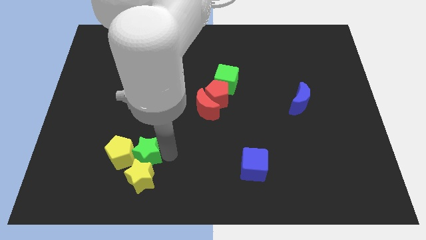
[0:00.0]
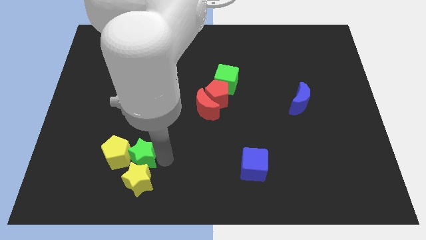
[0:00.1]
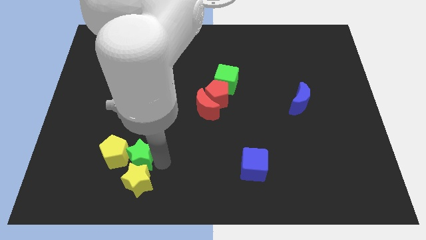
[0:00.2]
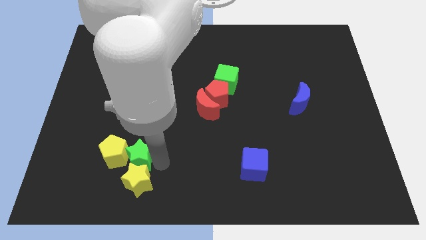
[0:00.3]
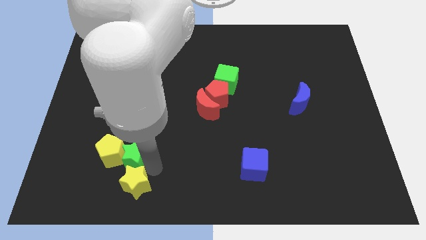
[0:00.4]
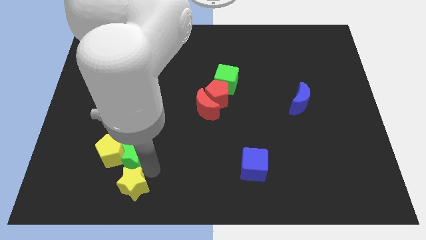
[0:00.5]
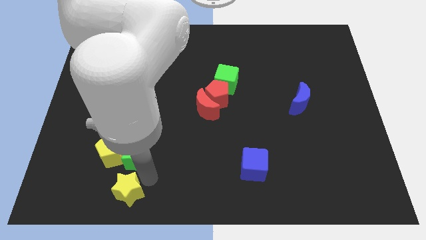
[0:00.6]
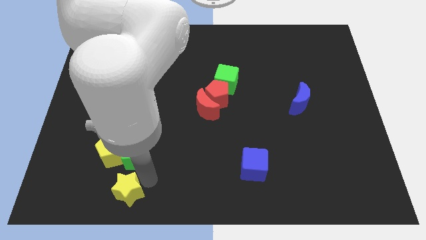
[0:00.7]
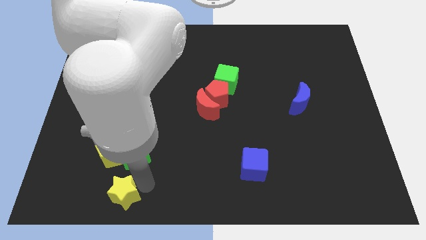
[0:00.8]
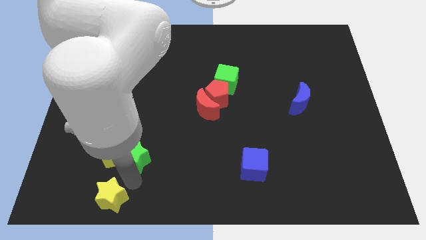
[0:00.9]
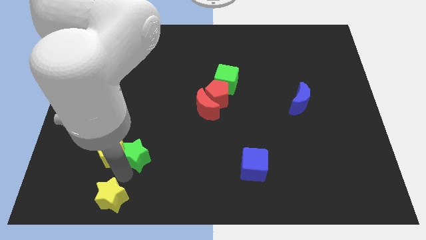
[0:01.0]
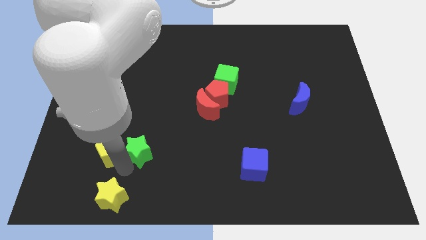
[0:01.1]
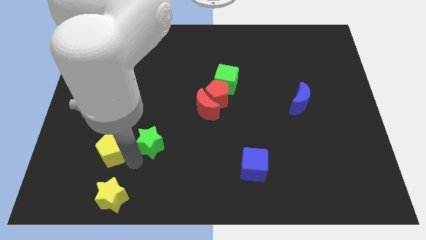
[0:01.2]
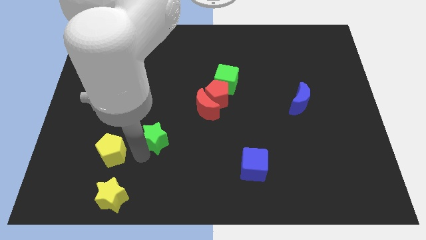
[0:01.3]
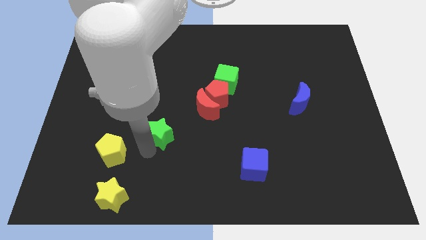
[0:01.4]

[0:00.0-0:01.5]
place yellow star below yellow pentagon

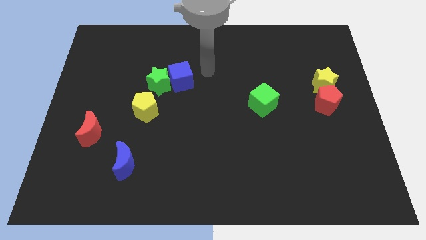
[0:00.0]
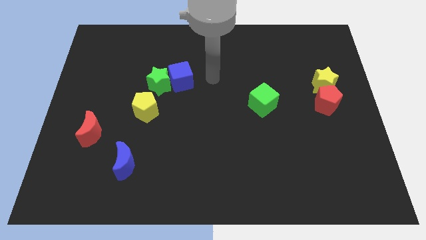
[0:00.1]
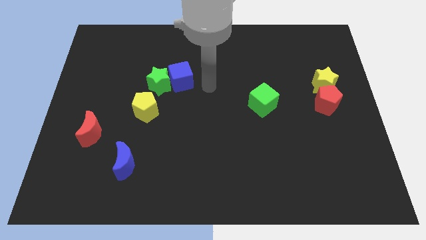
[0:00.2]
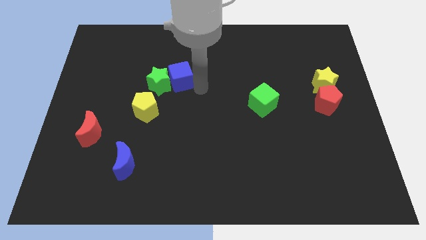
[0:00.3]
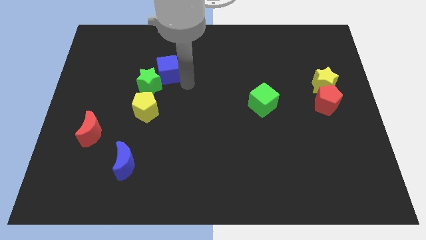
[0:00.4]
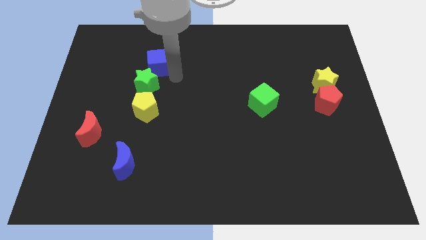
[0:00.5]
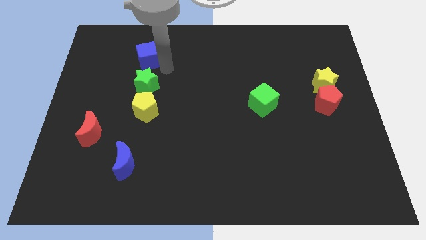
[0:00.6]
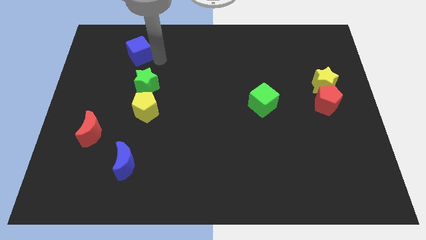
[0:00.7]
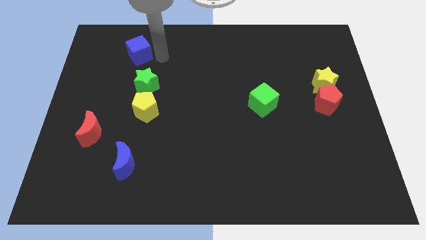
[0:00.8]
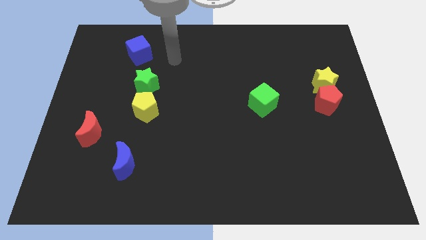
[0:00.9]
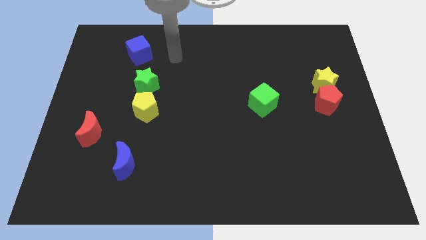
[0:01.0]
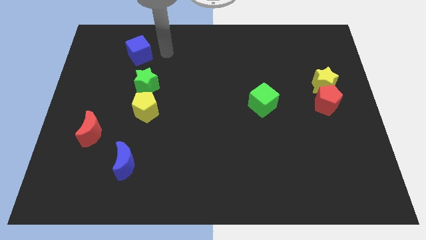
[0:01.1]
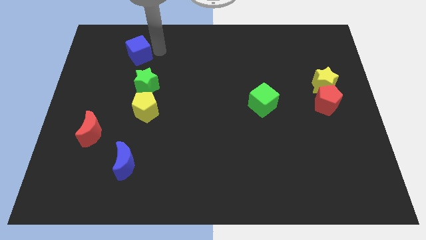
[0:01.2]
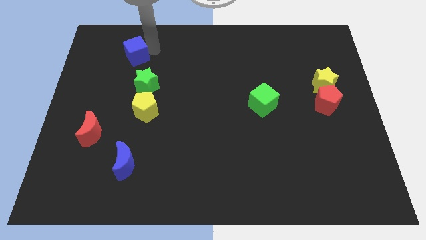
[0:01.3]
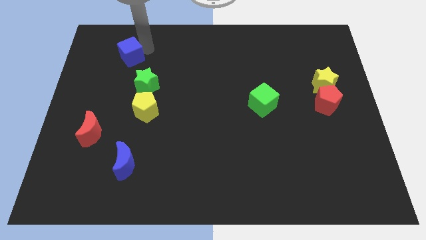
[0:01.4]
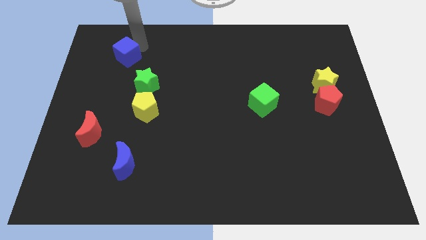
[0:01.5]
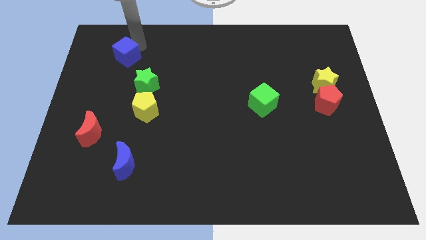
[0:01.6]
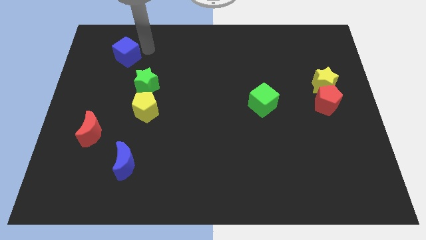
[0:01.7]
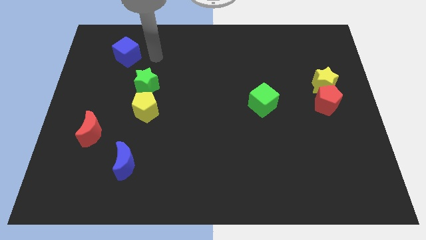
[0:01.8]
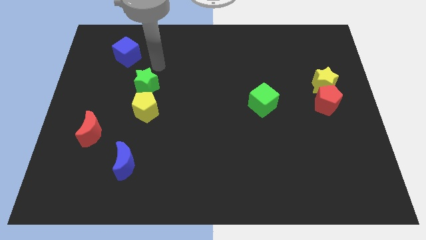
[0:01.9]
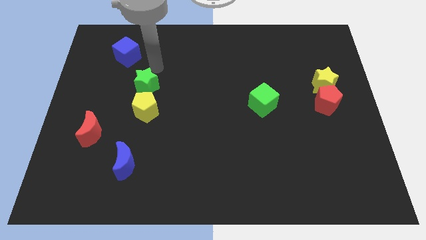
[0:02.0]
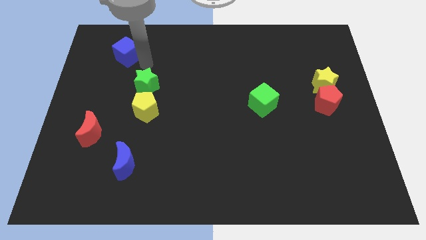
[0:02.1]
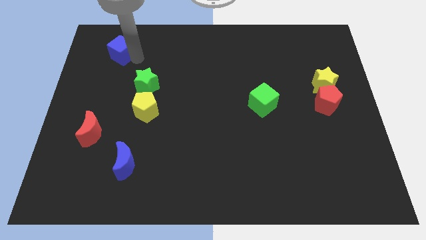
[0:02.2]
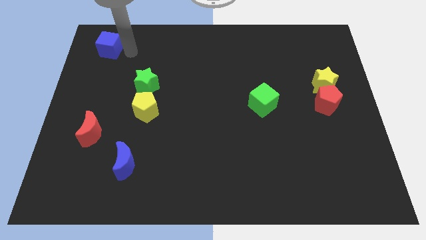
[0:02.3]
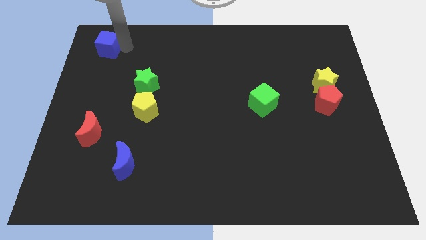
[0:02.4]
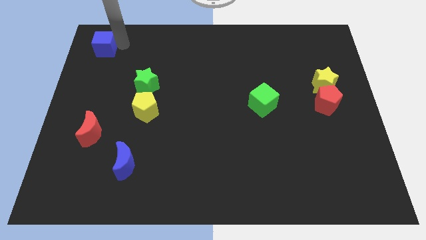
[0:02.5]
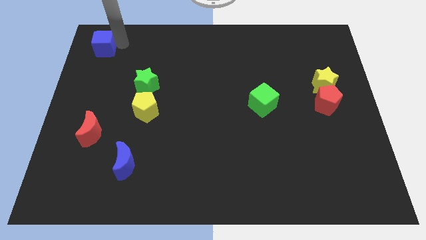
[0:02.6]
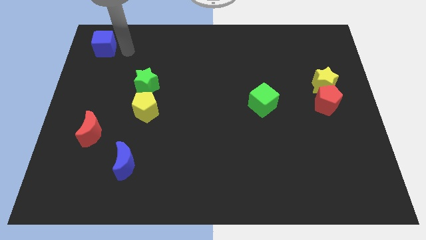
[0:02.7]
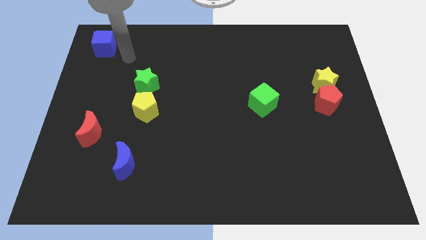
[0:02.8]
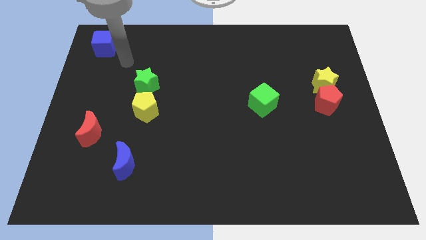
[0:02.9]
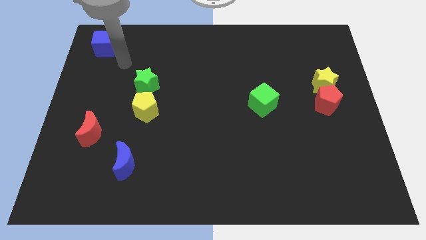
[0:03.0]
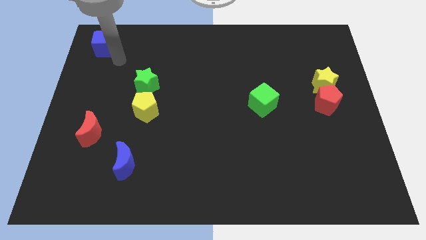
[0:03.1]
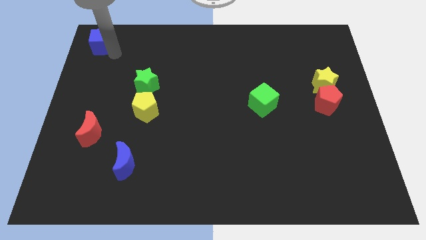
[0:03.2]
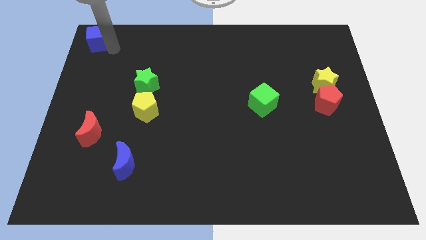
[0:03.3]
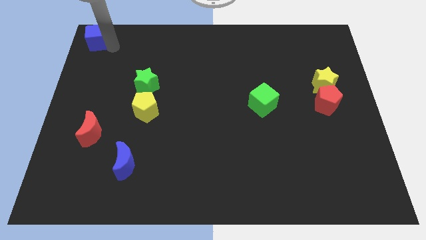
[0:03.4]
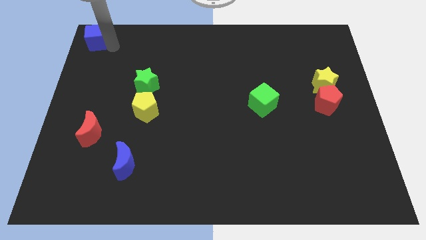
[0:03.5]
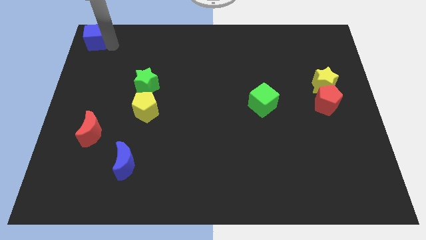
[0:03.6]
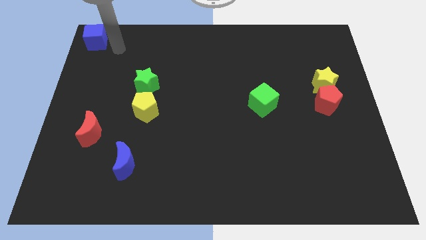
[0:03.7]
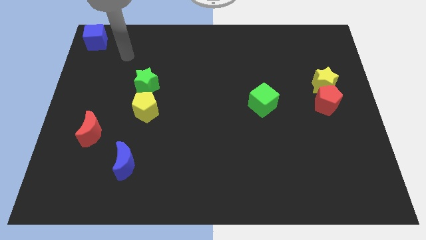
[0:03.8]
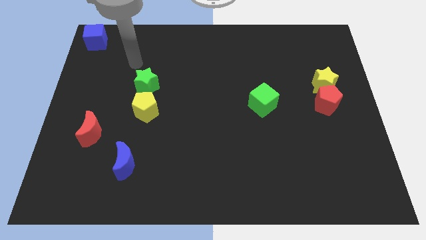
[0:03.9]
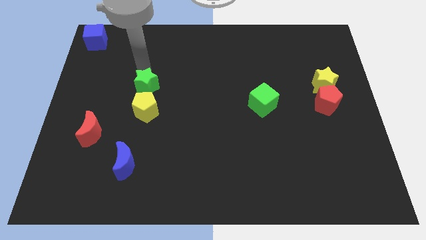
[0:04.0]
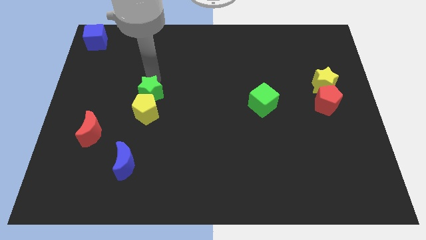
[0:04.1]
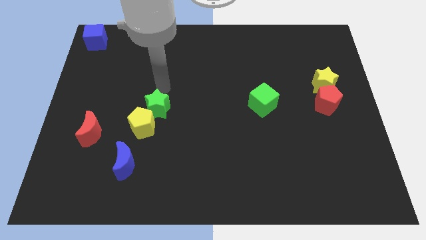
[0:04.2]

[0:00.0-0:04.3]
move the blue cube to the top left corner

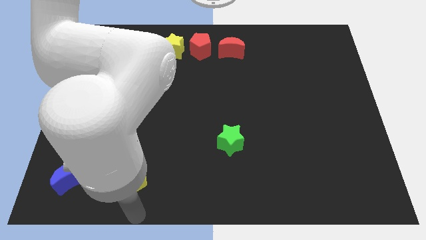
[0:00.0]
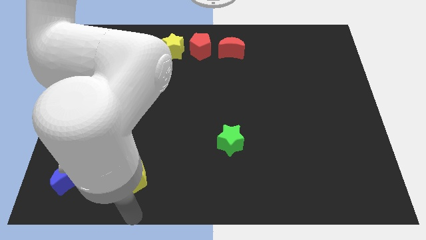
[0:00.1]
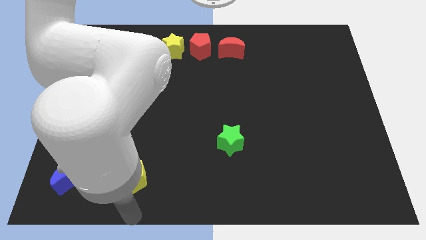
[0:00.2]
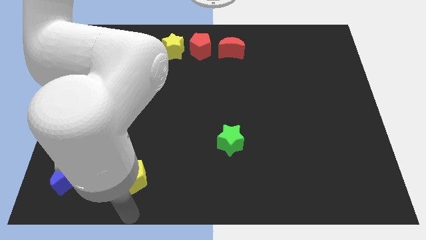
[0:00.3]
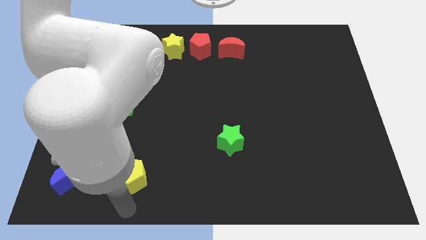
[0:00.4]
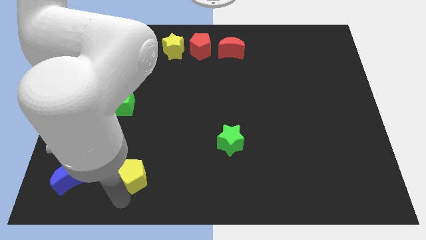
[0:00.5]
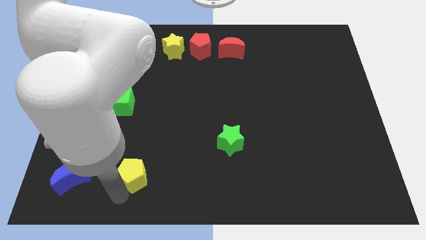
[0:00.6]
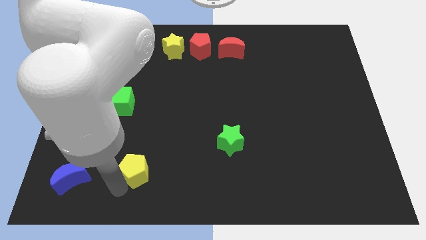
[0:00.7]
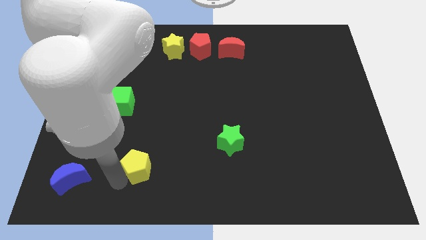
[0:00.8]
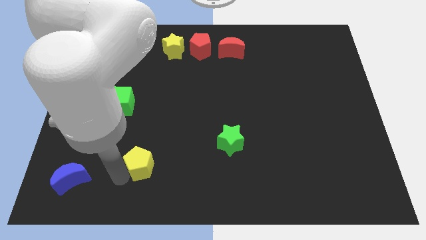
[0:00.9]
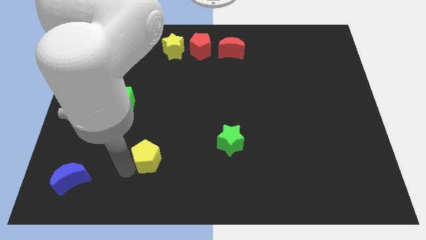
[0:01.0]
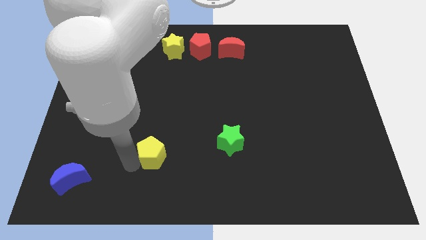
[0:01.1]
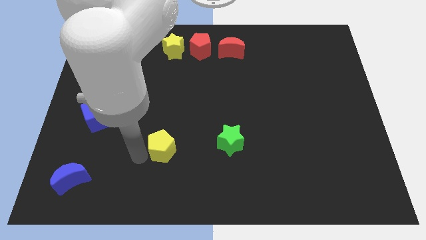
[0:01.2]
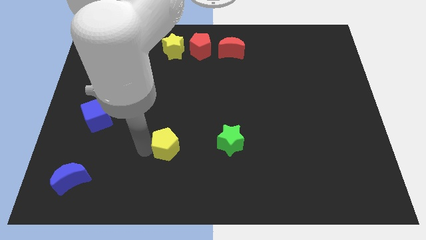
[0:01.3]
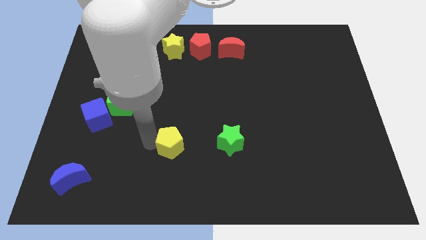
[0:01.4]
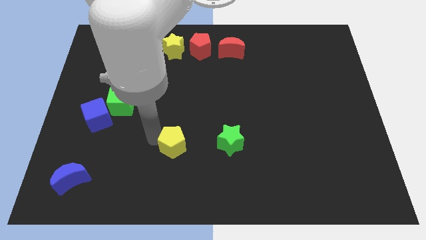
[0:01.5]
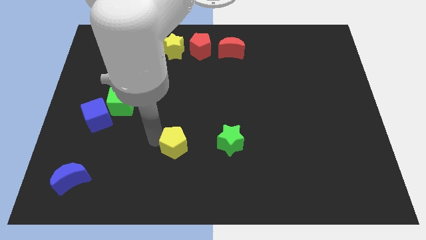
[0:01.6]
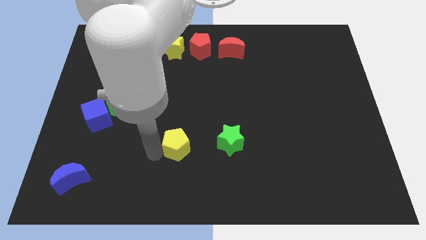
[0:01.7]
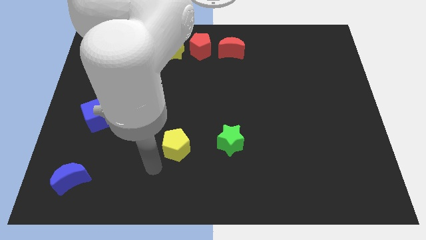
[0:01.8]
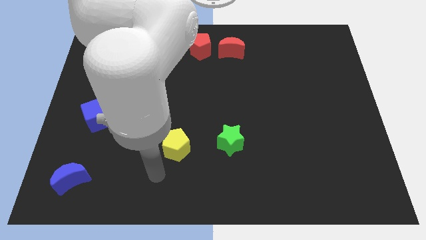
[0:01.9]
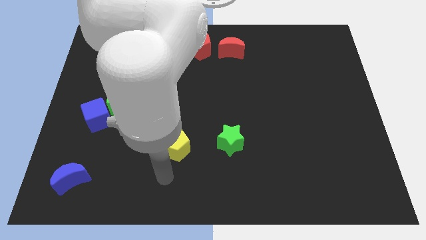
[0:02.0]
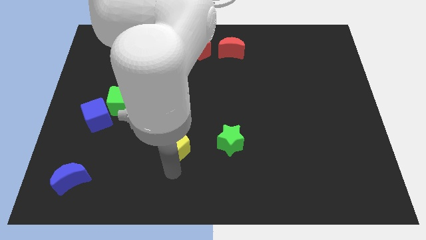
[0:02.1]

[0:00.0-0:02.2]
place the yellow pentagon left to the green star

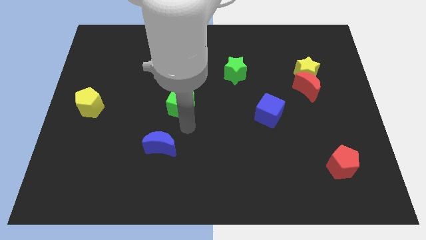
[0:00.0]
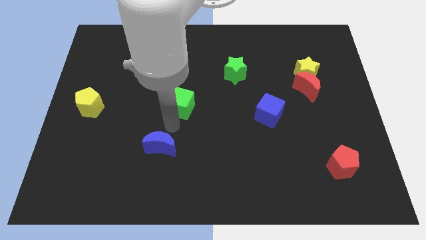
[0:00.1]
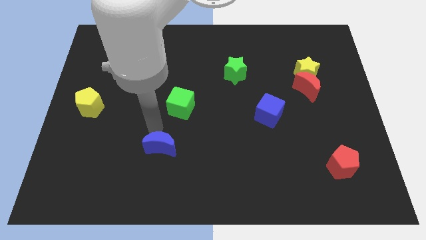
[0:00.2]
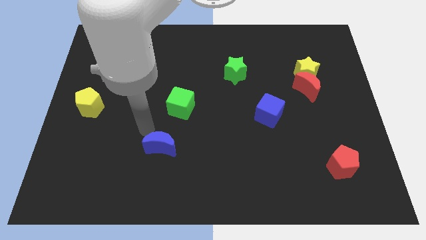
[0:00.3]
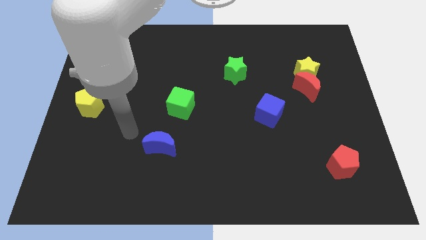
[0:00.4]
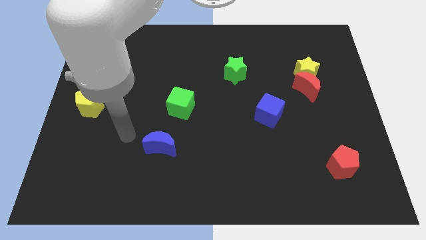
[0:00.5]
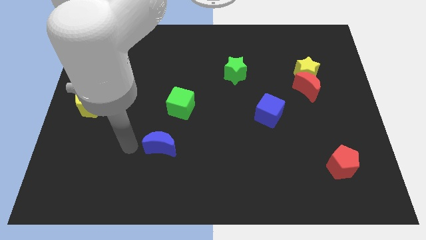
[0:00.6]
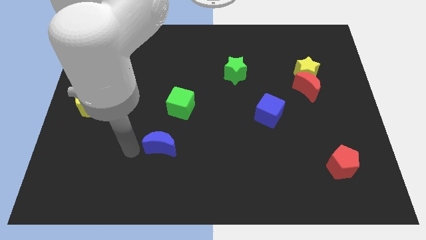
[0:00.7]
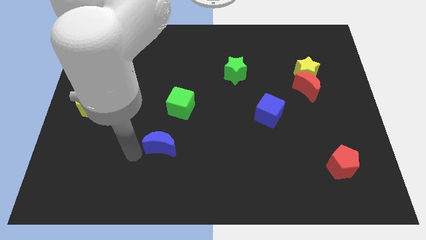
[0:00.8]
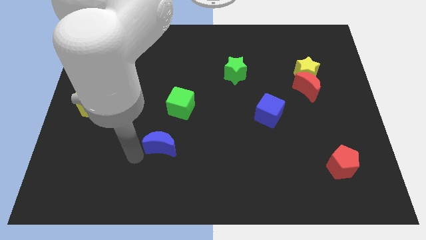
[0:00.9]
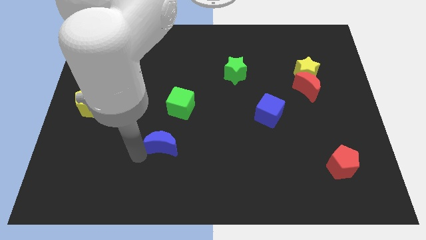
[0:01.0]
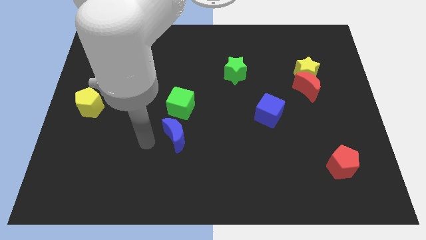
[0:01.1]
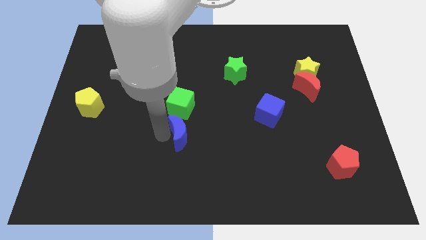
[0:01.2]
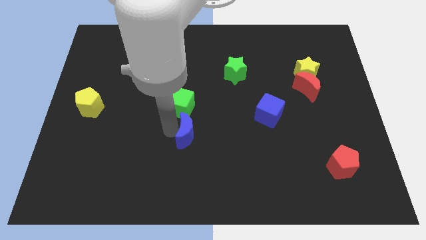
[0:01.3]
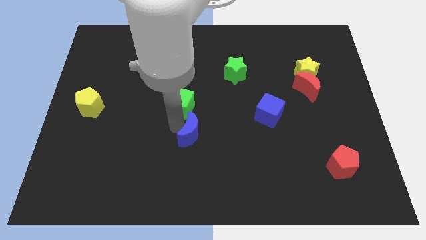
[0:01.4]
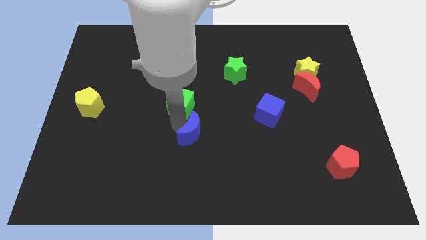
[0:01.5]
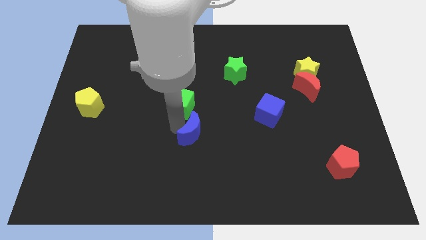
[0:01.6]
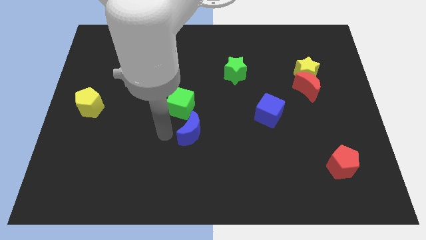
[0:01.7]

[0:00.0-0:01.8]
push blue crescent below green cube
